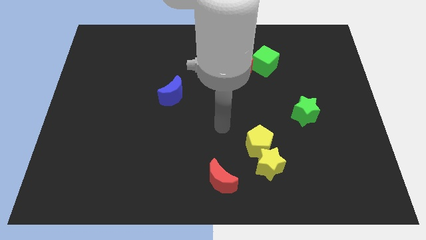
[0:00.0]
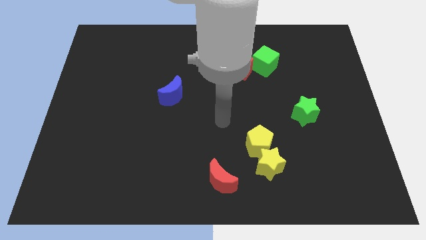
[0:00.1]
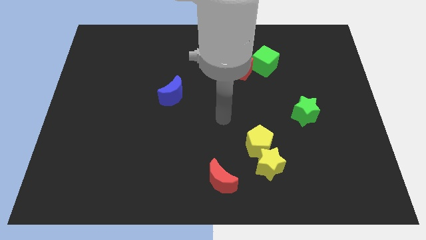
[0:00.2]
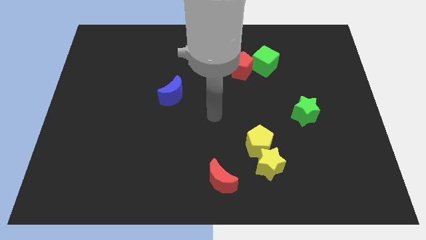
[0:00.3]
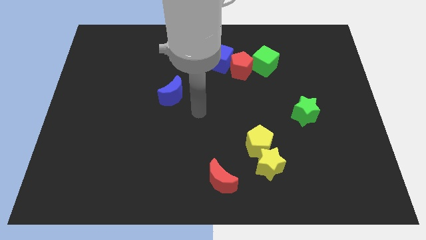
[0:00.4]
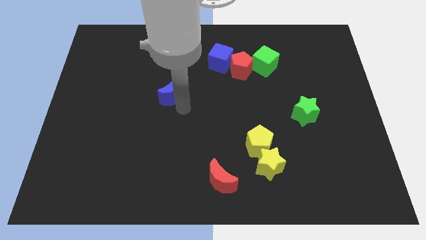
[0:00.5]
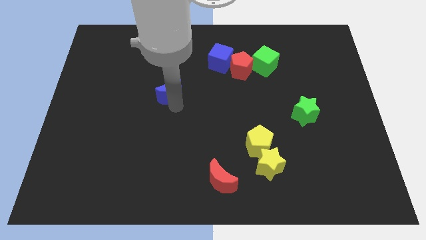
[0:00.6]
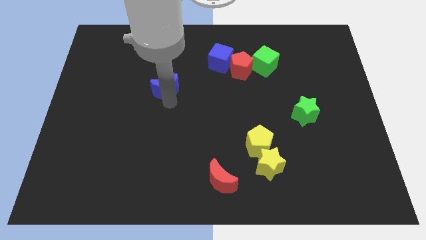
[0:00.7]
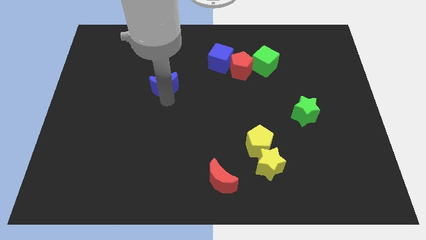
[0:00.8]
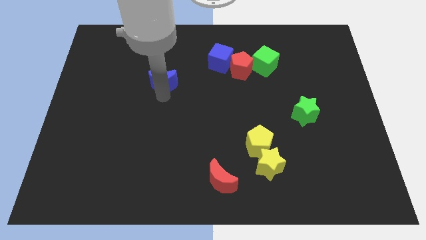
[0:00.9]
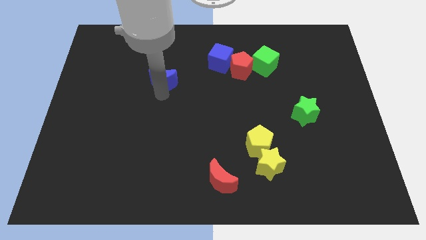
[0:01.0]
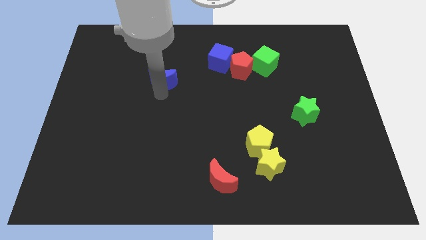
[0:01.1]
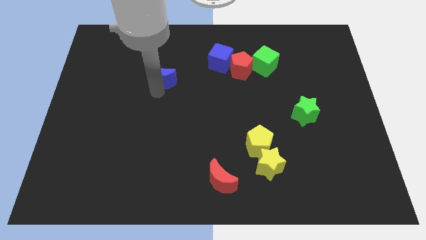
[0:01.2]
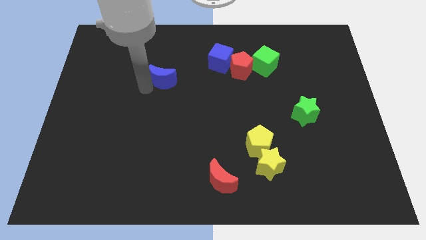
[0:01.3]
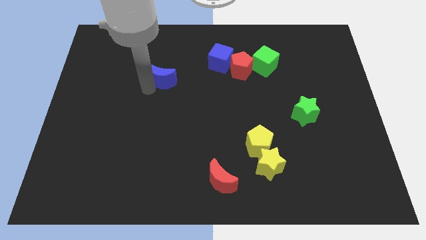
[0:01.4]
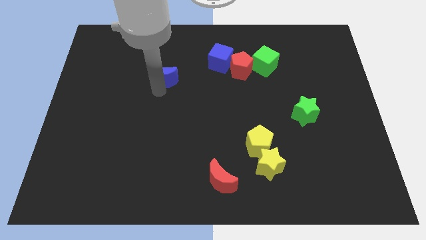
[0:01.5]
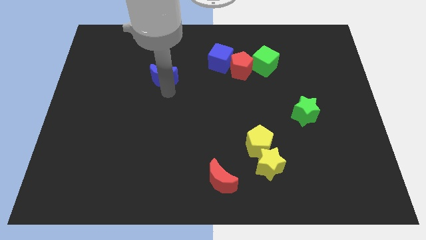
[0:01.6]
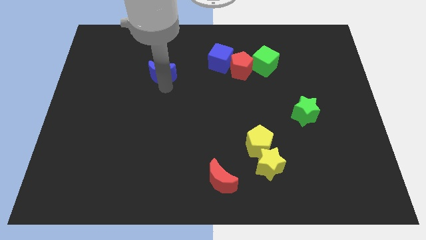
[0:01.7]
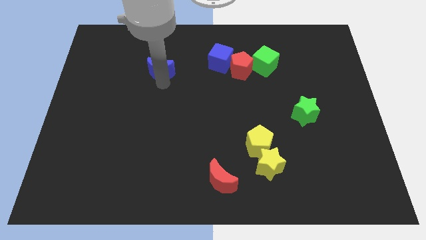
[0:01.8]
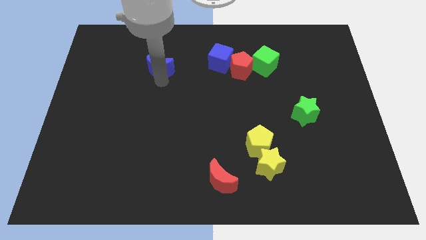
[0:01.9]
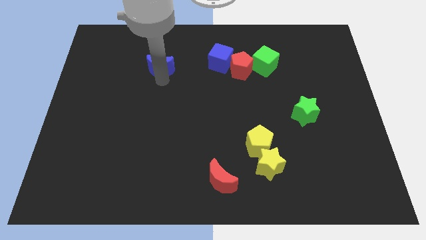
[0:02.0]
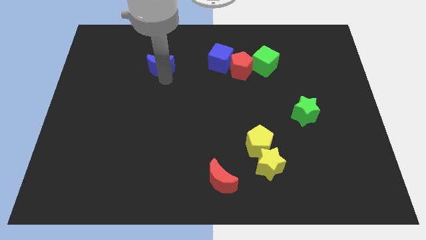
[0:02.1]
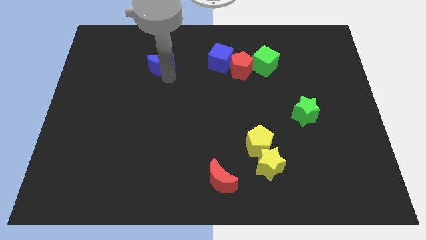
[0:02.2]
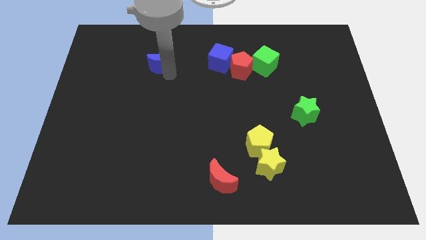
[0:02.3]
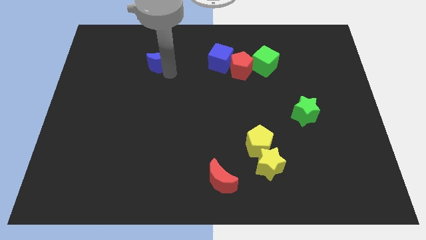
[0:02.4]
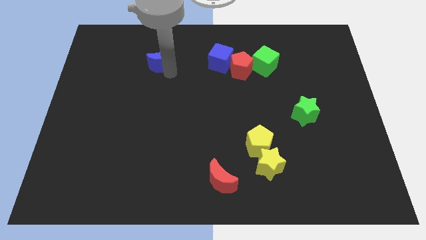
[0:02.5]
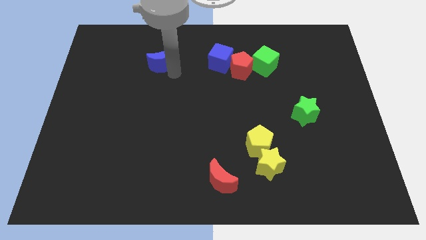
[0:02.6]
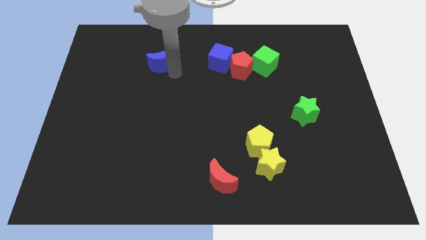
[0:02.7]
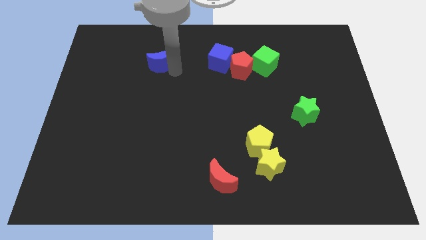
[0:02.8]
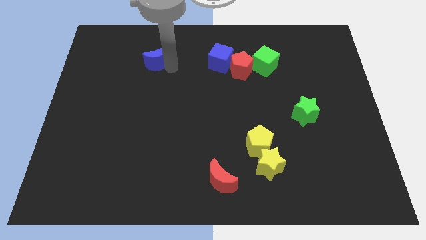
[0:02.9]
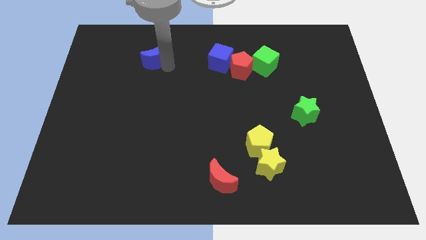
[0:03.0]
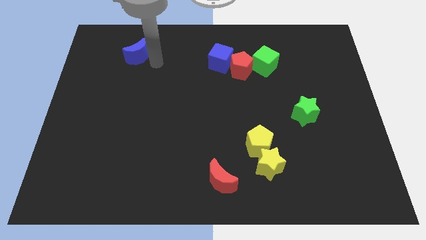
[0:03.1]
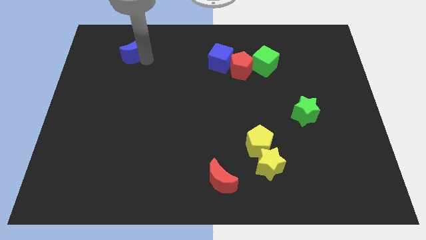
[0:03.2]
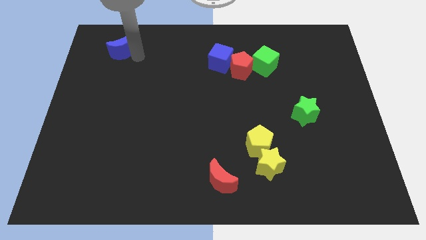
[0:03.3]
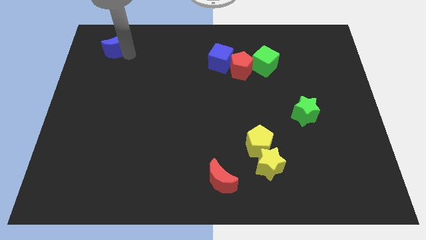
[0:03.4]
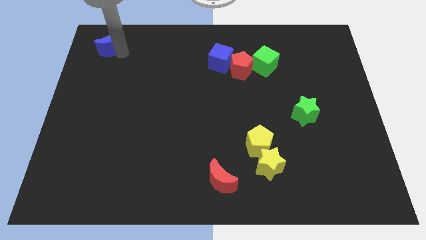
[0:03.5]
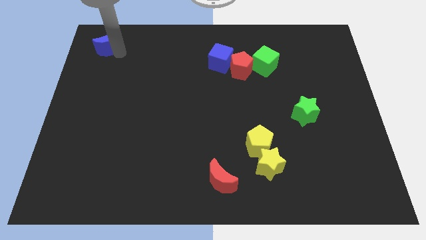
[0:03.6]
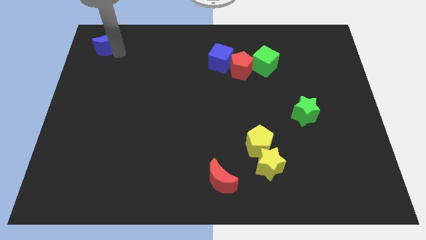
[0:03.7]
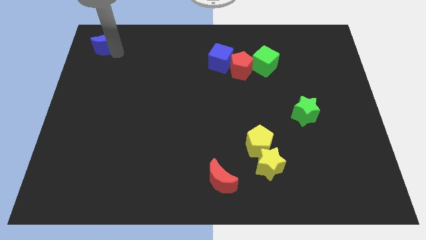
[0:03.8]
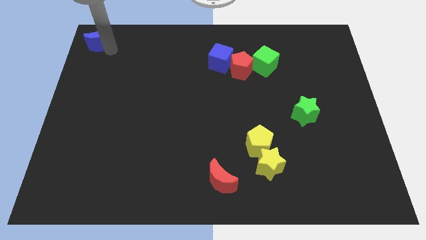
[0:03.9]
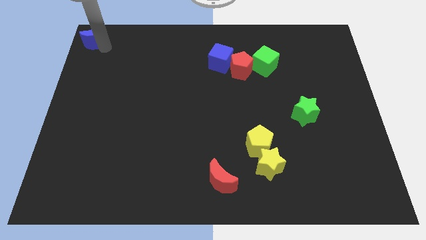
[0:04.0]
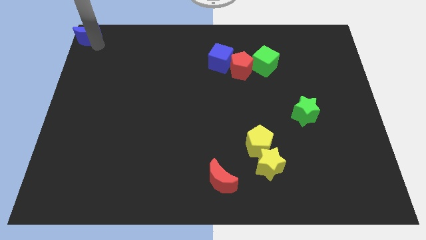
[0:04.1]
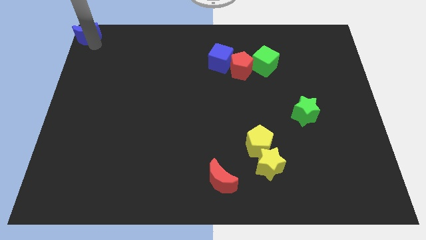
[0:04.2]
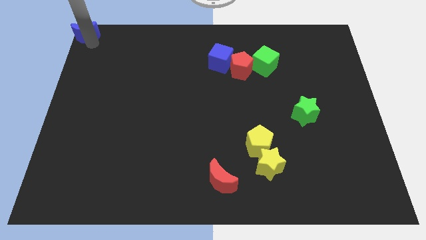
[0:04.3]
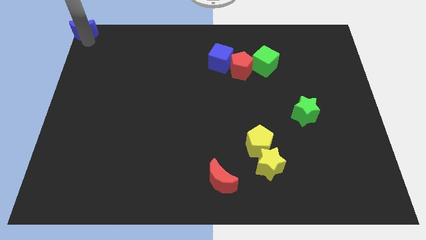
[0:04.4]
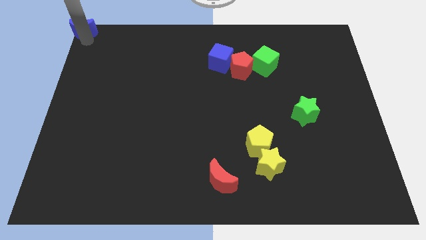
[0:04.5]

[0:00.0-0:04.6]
move the blue moon to the top left side

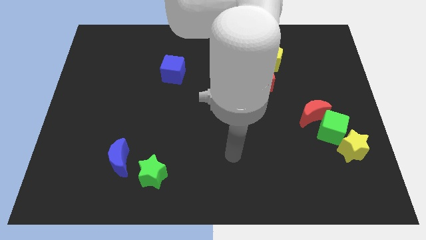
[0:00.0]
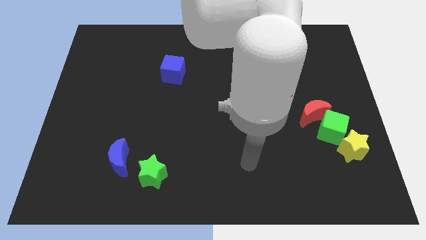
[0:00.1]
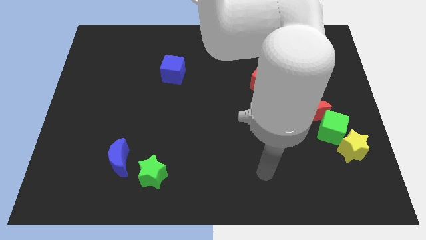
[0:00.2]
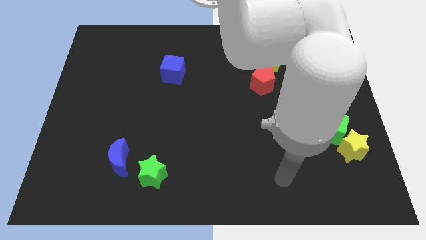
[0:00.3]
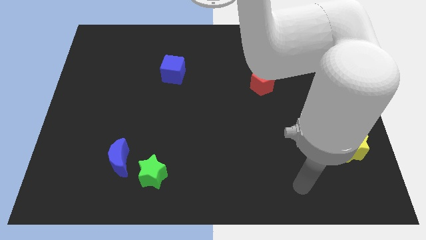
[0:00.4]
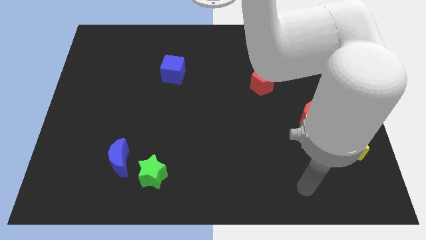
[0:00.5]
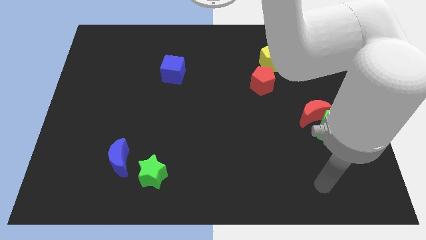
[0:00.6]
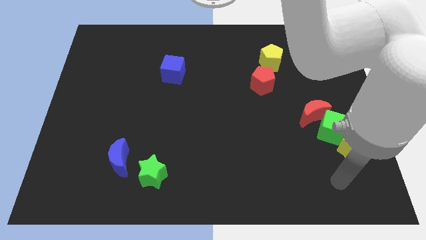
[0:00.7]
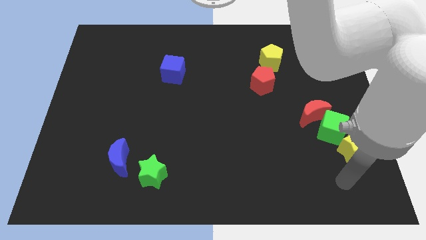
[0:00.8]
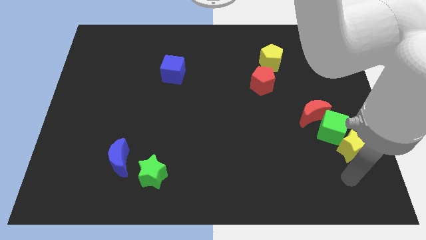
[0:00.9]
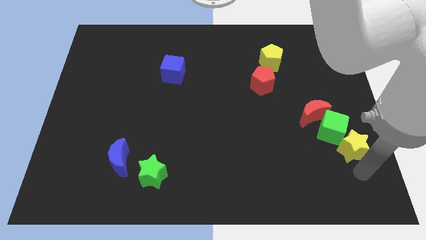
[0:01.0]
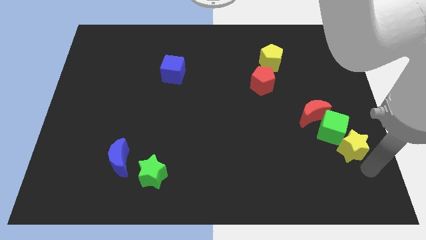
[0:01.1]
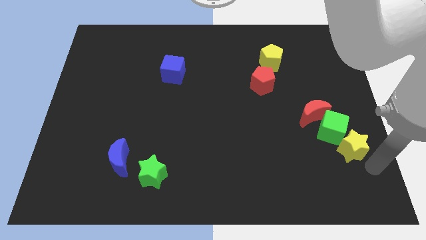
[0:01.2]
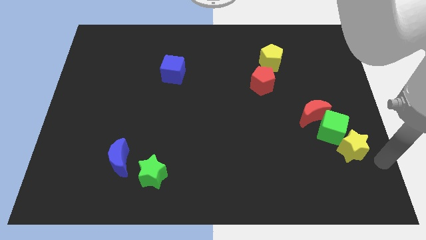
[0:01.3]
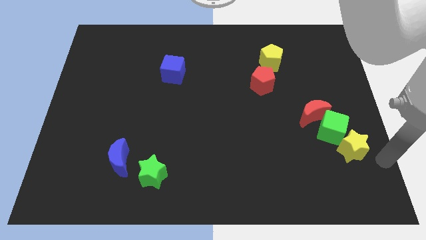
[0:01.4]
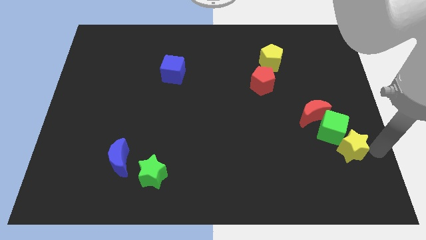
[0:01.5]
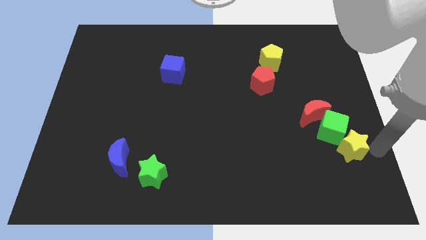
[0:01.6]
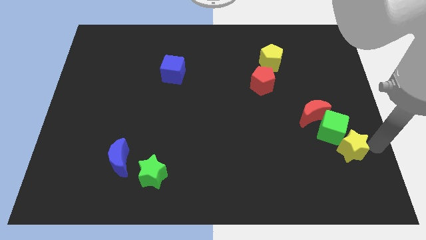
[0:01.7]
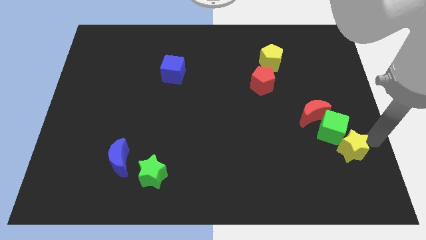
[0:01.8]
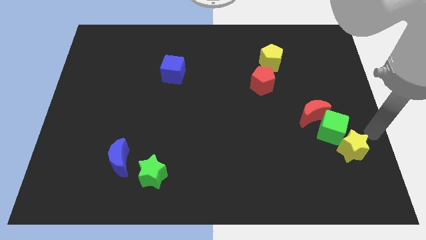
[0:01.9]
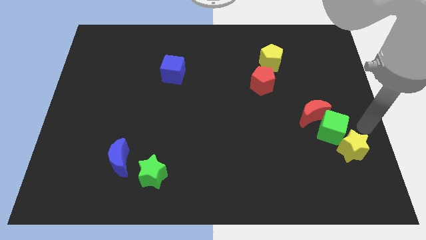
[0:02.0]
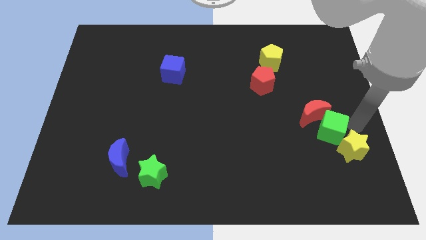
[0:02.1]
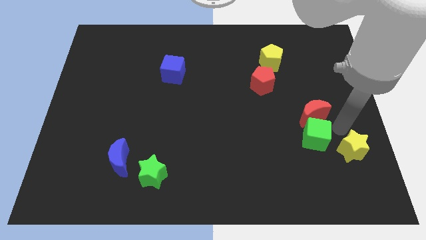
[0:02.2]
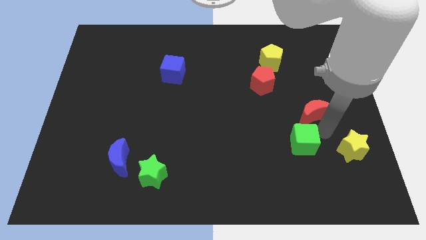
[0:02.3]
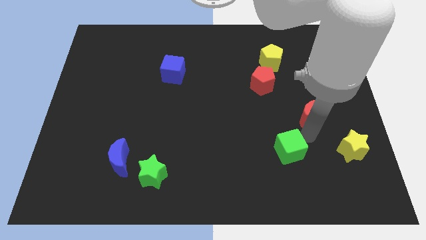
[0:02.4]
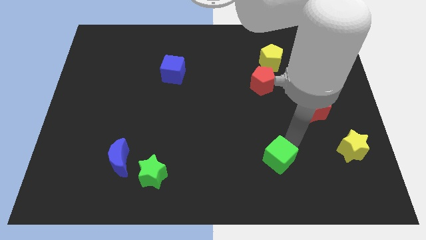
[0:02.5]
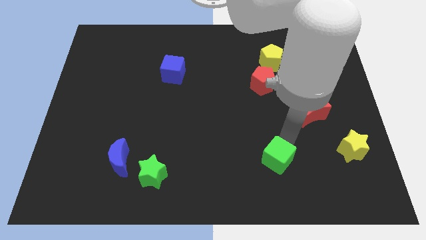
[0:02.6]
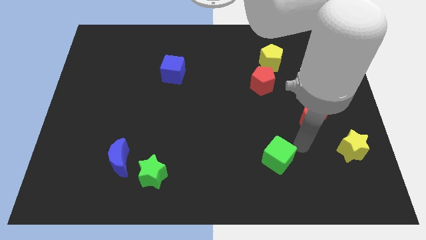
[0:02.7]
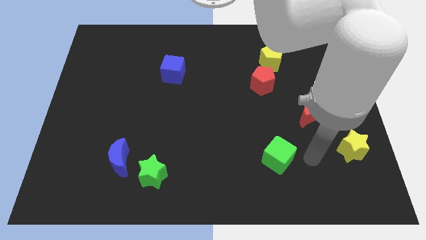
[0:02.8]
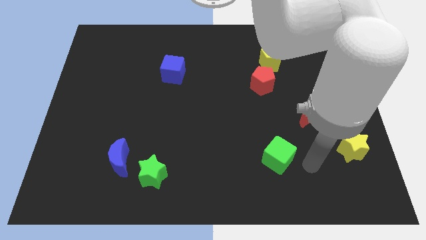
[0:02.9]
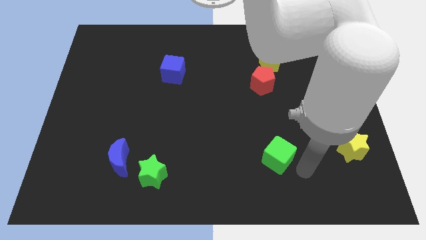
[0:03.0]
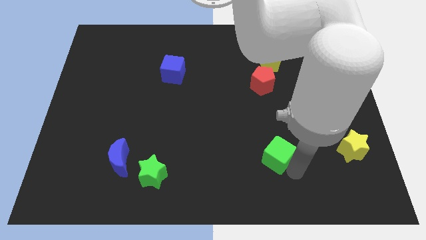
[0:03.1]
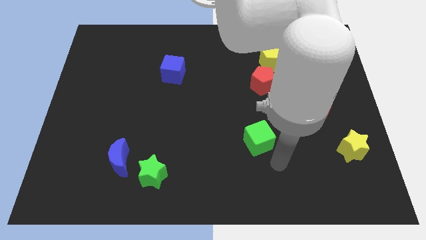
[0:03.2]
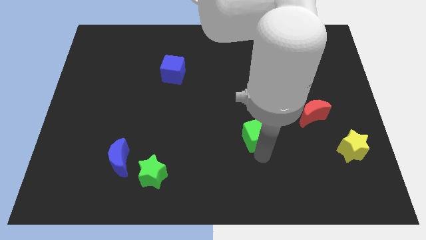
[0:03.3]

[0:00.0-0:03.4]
place the green cube below the red pentagon

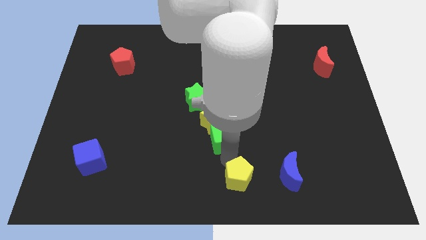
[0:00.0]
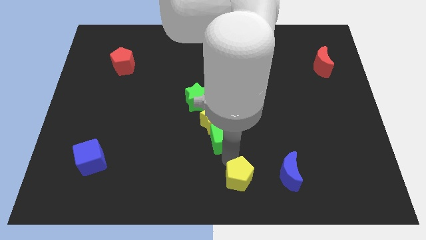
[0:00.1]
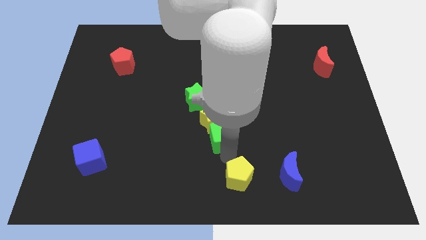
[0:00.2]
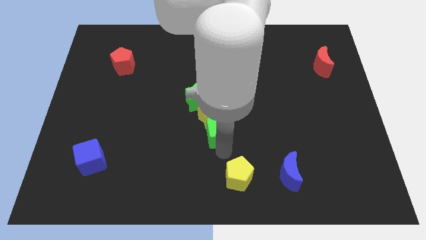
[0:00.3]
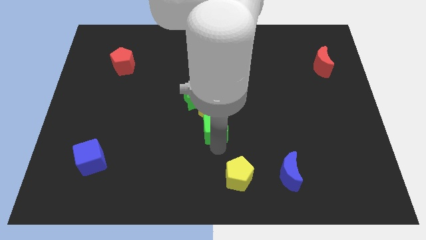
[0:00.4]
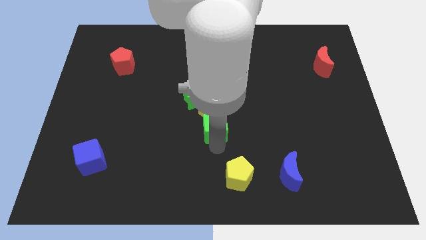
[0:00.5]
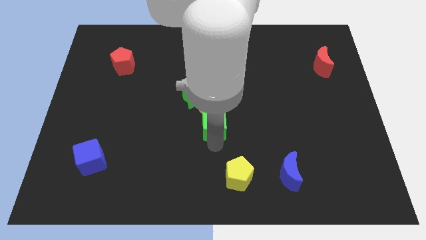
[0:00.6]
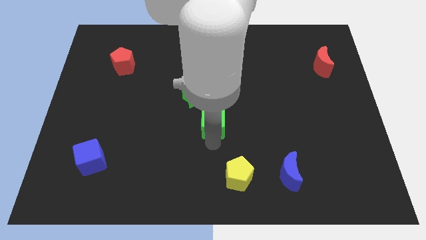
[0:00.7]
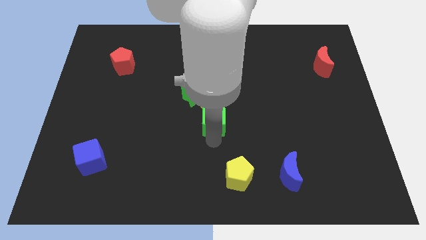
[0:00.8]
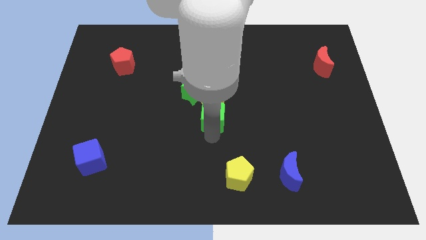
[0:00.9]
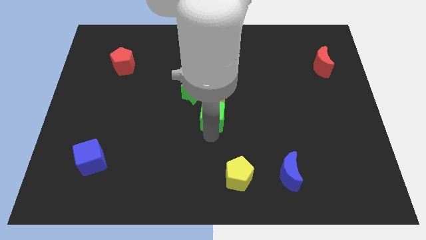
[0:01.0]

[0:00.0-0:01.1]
push the green block
